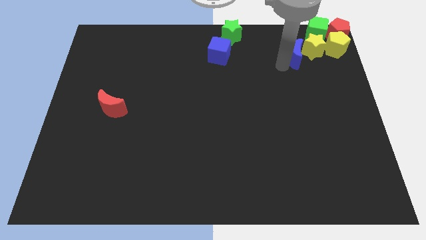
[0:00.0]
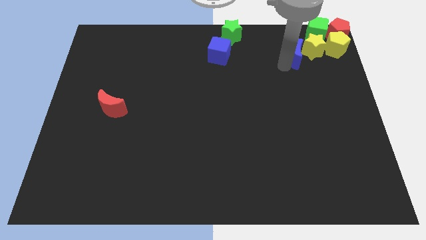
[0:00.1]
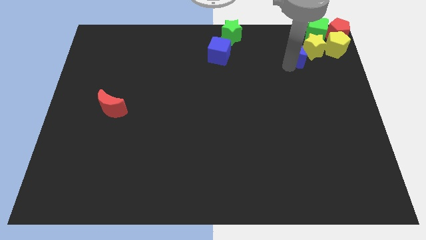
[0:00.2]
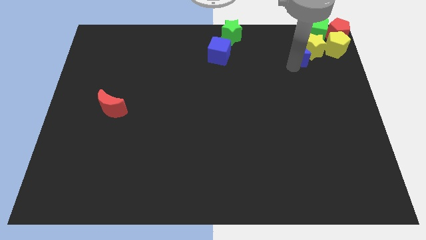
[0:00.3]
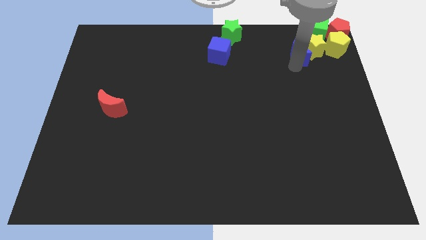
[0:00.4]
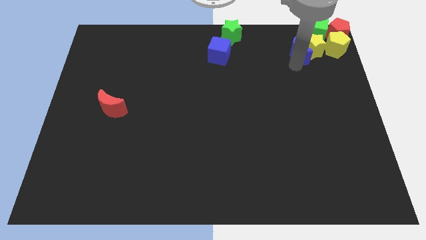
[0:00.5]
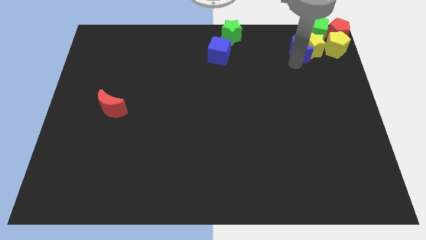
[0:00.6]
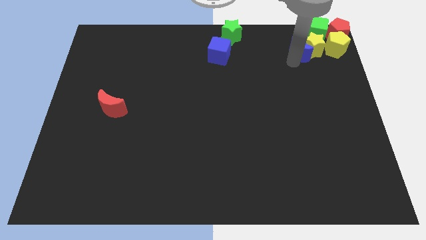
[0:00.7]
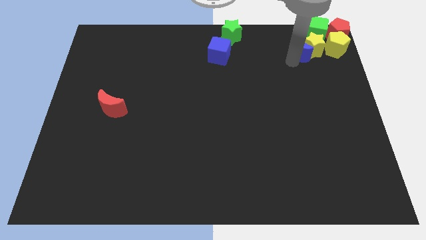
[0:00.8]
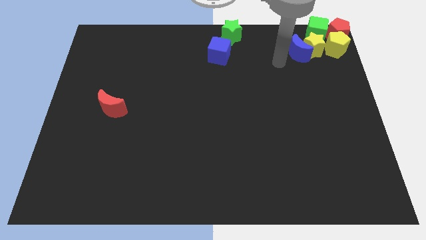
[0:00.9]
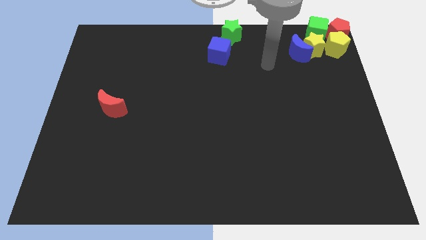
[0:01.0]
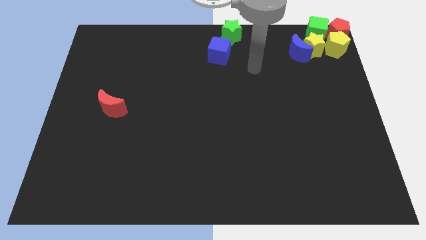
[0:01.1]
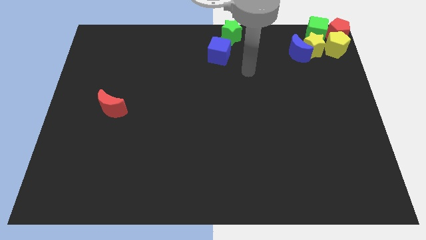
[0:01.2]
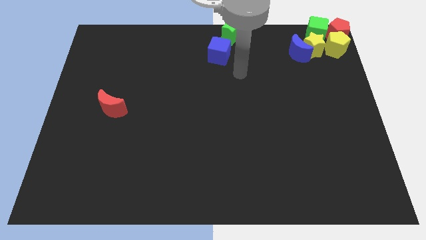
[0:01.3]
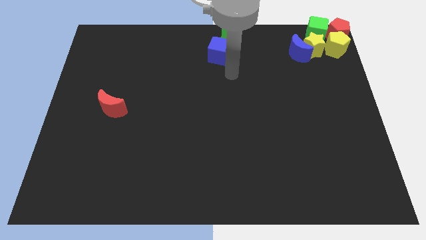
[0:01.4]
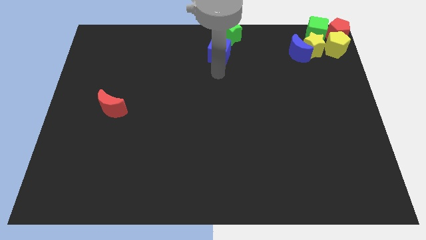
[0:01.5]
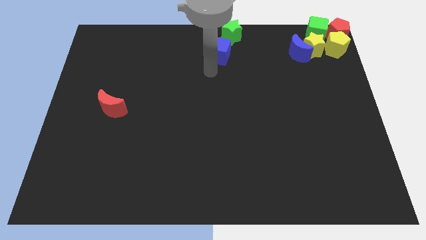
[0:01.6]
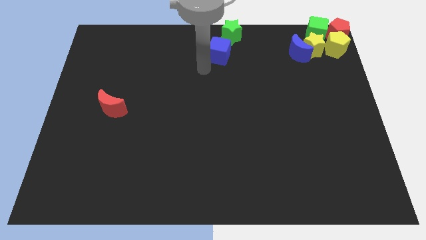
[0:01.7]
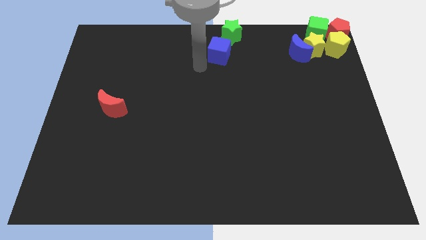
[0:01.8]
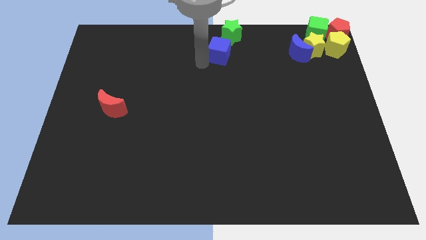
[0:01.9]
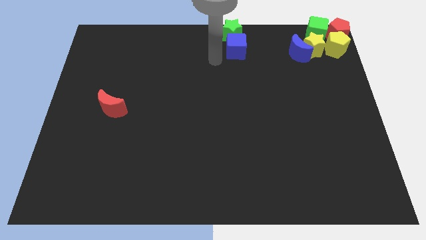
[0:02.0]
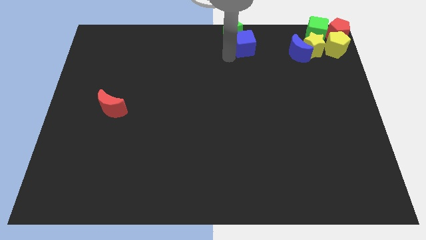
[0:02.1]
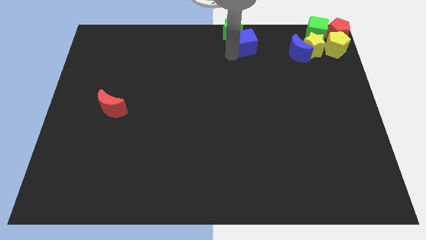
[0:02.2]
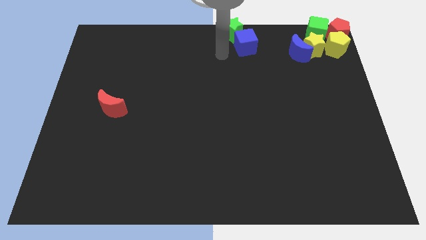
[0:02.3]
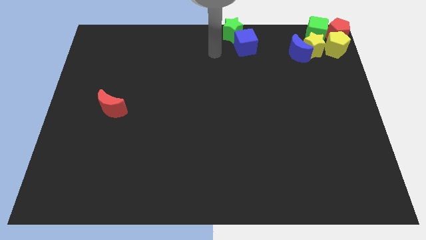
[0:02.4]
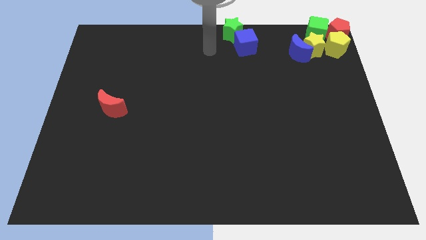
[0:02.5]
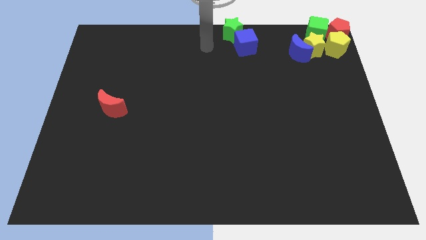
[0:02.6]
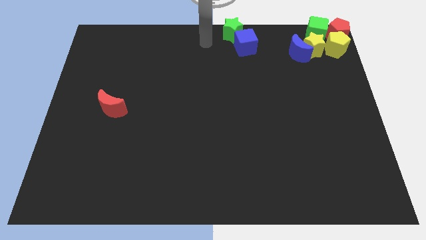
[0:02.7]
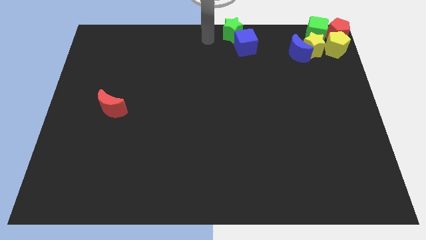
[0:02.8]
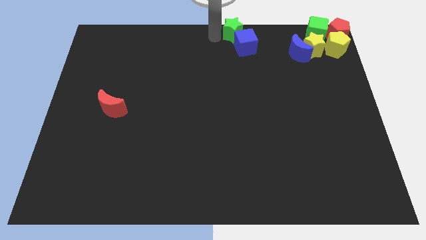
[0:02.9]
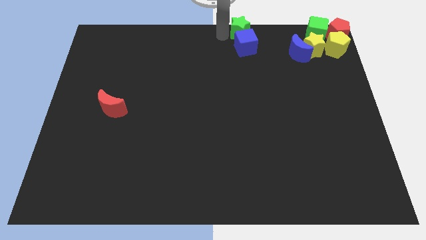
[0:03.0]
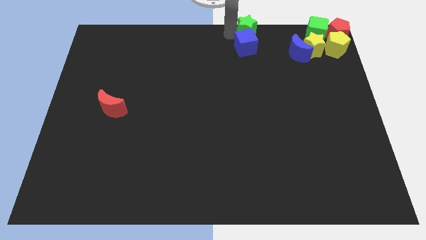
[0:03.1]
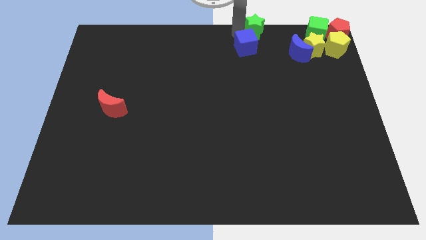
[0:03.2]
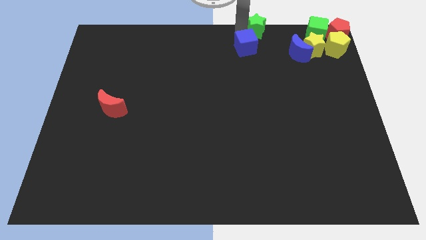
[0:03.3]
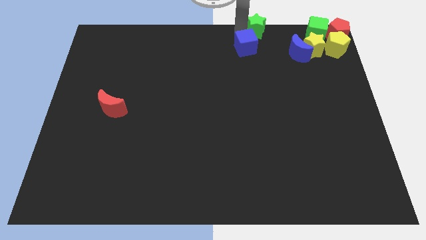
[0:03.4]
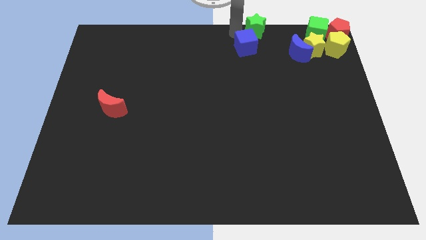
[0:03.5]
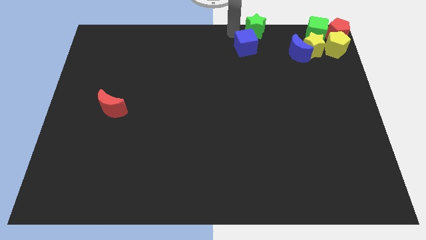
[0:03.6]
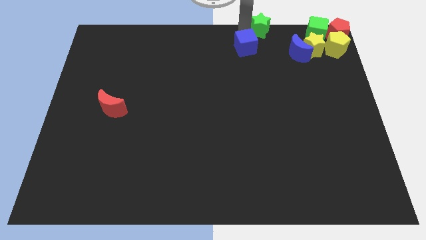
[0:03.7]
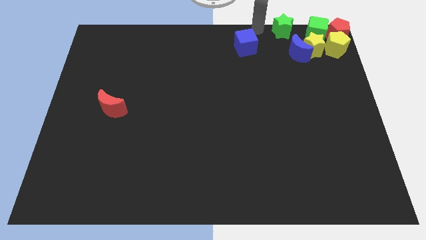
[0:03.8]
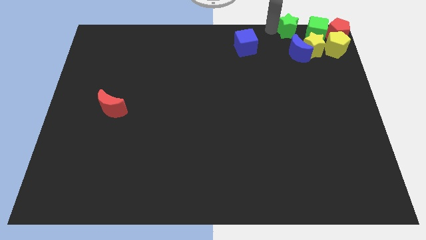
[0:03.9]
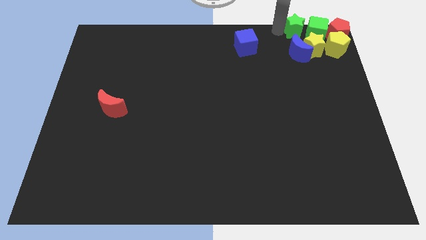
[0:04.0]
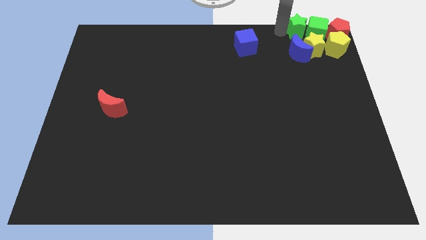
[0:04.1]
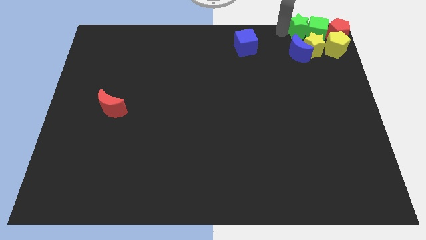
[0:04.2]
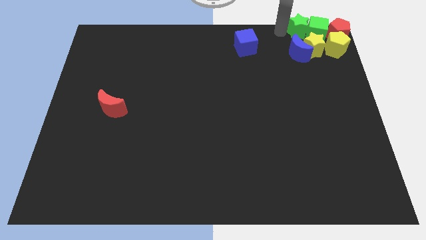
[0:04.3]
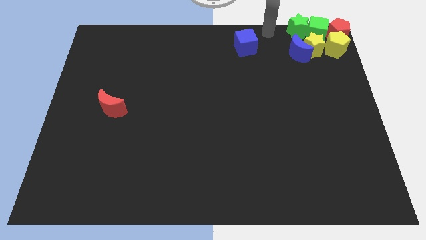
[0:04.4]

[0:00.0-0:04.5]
move the green star left beside the green star

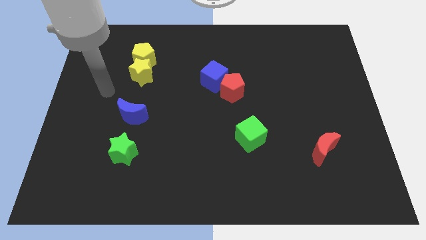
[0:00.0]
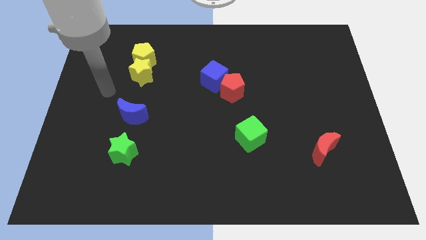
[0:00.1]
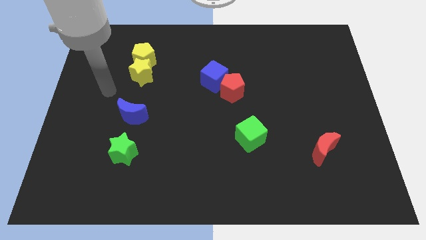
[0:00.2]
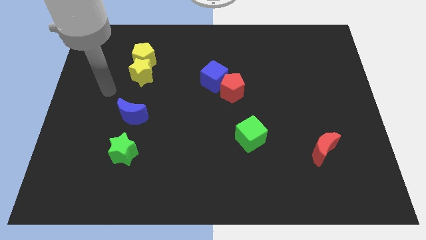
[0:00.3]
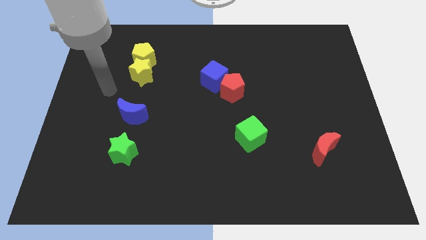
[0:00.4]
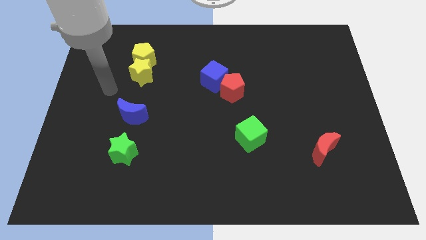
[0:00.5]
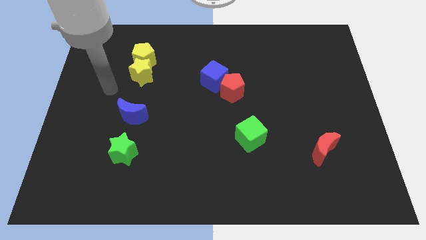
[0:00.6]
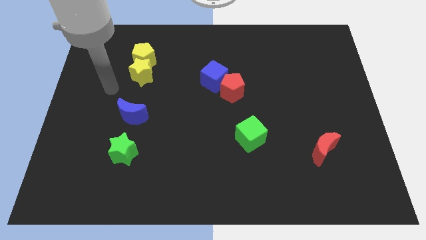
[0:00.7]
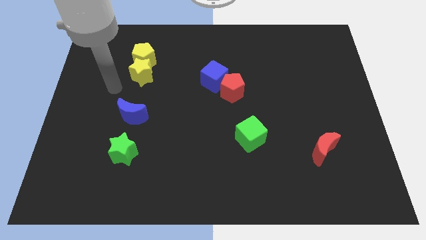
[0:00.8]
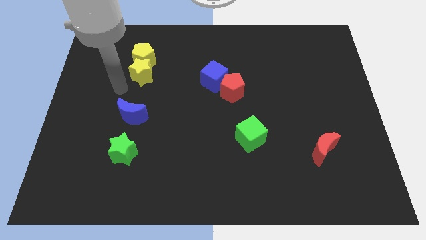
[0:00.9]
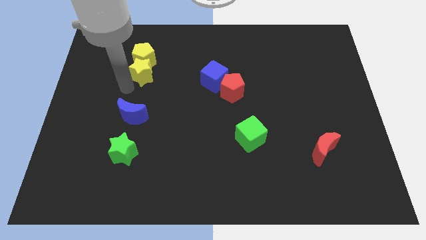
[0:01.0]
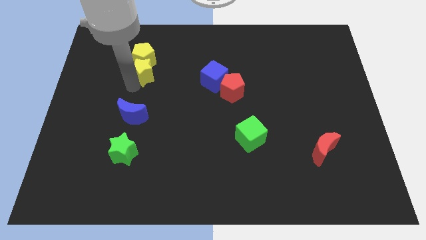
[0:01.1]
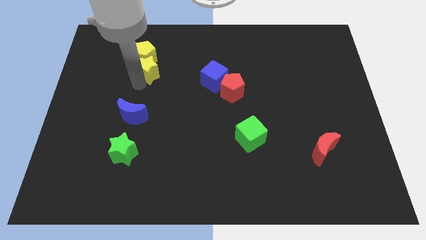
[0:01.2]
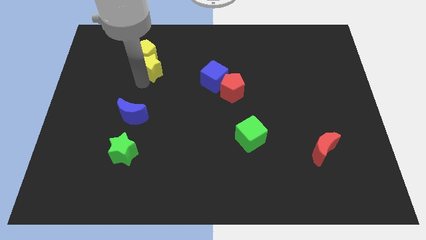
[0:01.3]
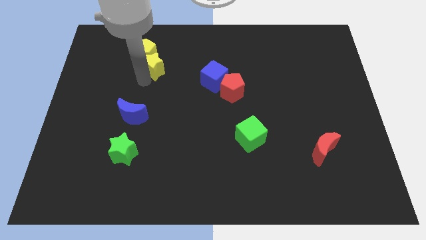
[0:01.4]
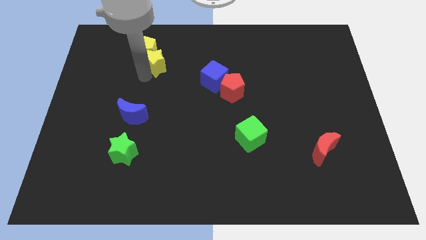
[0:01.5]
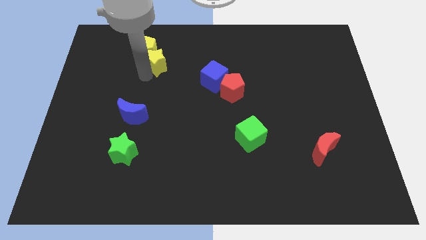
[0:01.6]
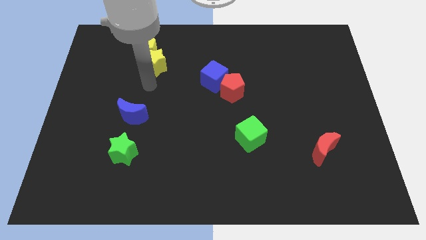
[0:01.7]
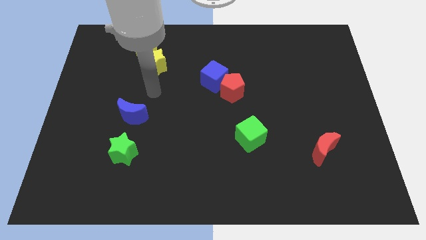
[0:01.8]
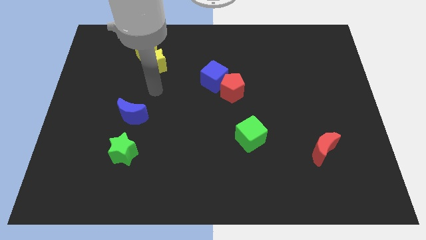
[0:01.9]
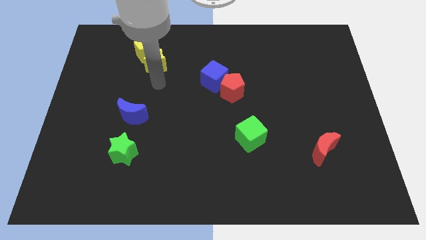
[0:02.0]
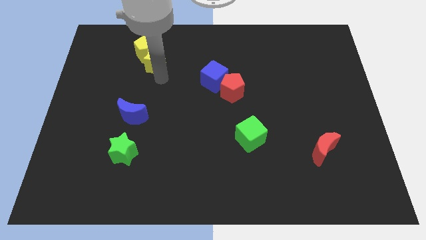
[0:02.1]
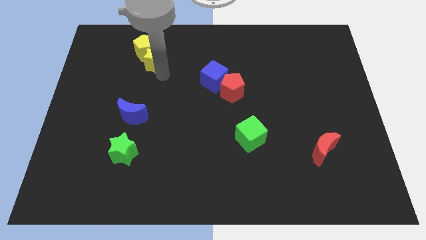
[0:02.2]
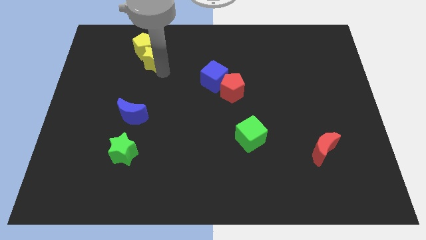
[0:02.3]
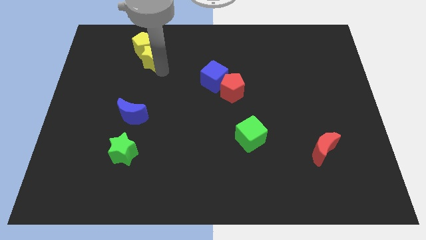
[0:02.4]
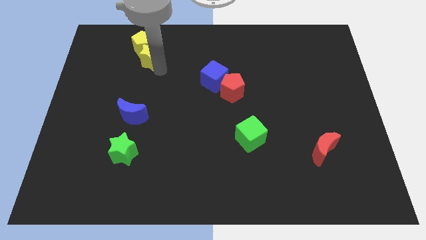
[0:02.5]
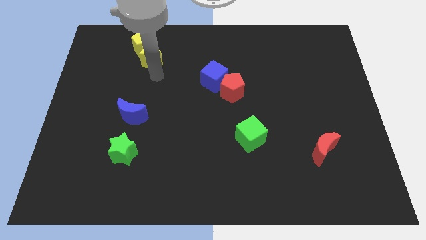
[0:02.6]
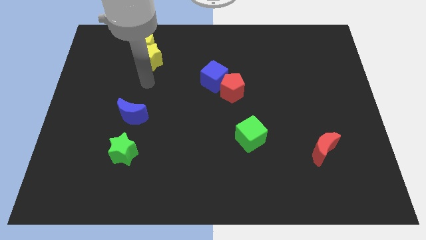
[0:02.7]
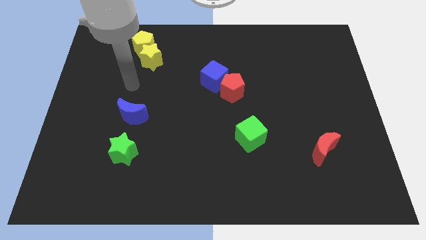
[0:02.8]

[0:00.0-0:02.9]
move yellow blocks slightly upwards

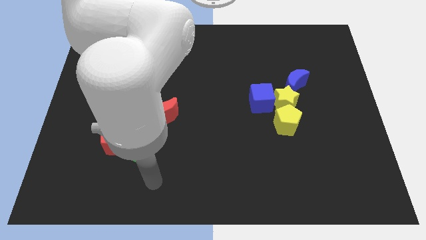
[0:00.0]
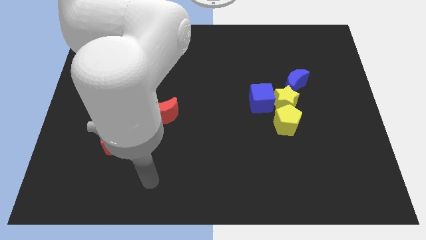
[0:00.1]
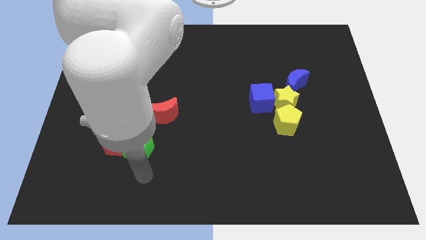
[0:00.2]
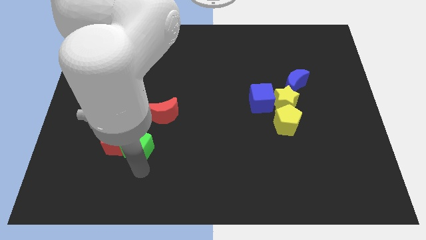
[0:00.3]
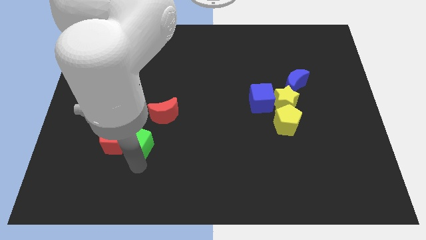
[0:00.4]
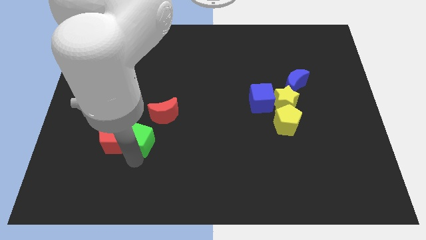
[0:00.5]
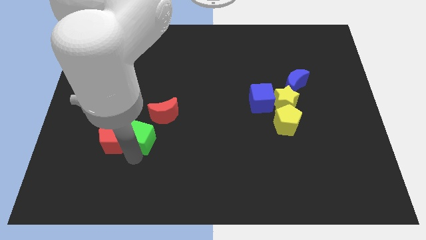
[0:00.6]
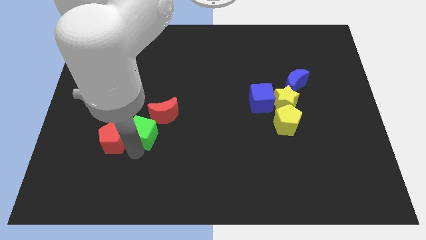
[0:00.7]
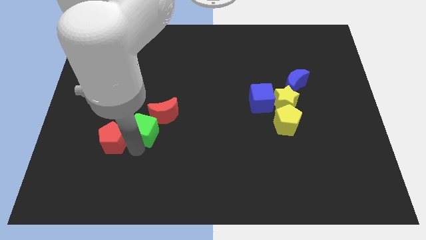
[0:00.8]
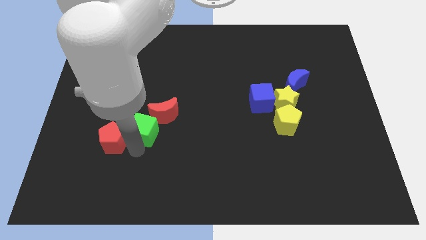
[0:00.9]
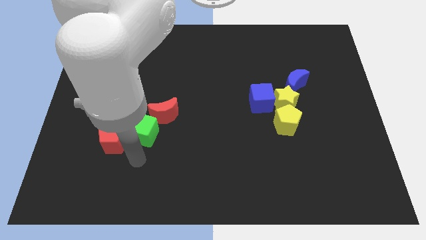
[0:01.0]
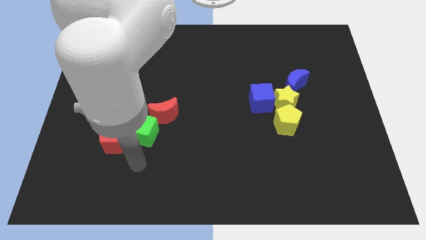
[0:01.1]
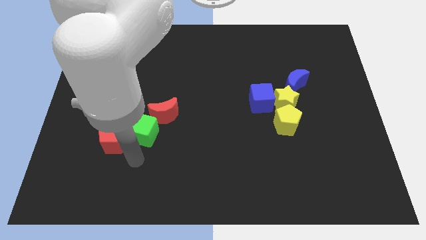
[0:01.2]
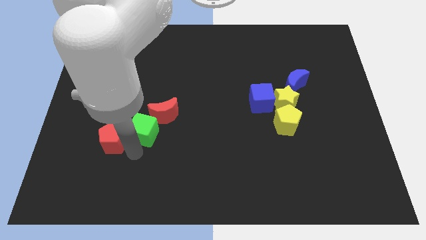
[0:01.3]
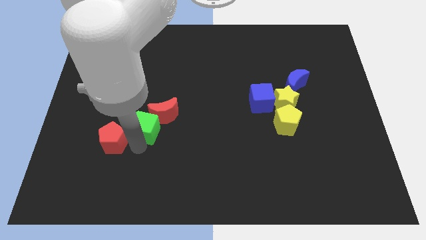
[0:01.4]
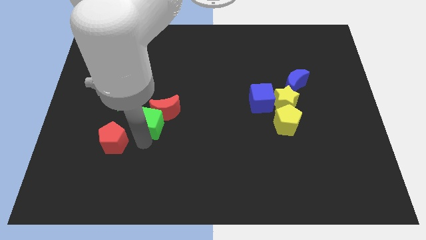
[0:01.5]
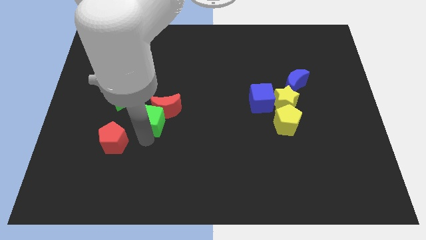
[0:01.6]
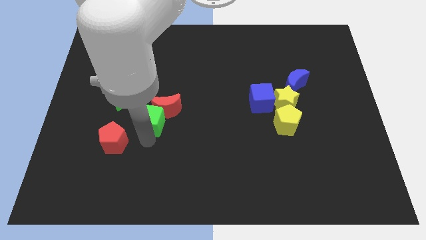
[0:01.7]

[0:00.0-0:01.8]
push the green cube into the bottom side of the red crescent
